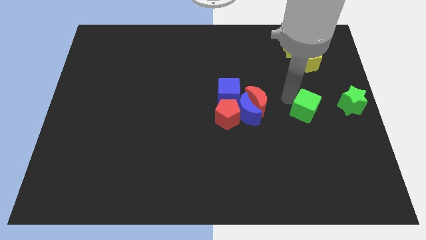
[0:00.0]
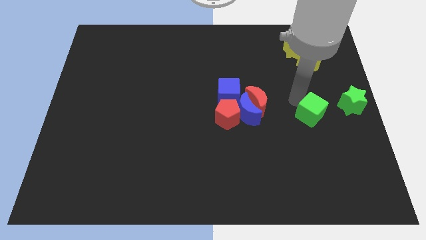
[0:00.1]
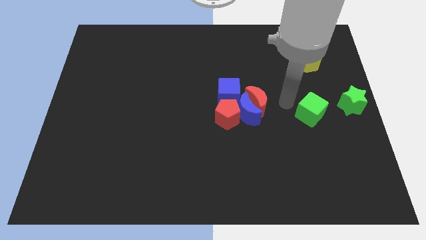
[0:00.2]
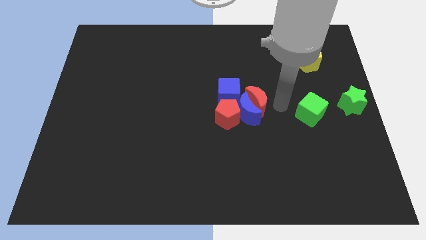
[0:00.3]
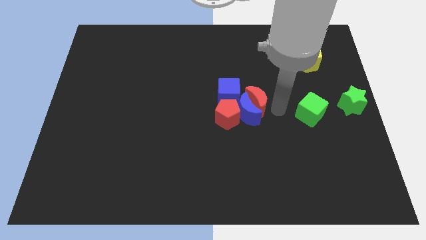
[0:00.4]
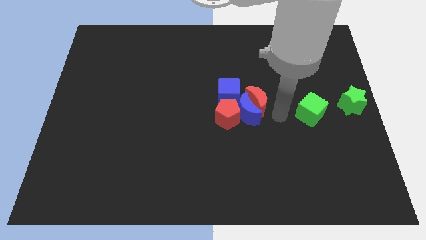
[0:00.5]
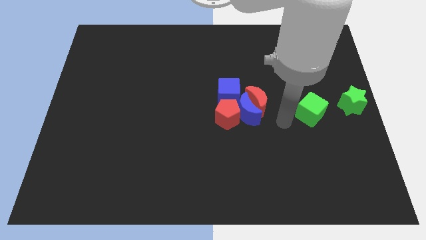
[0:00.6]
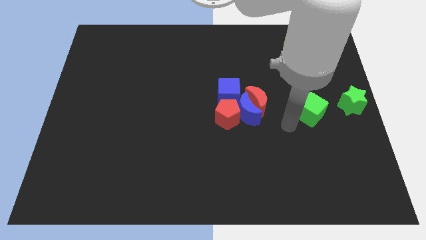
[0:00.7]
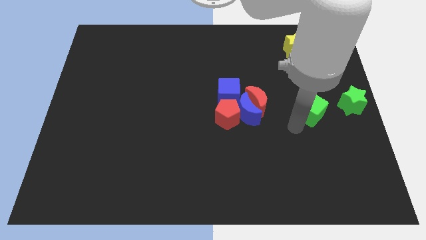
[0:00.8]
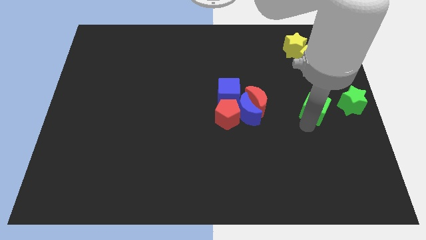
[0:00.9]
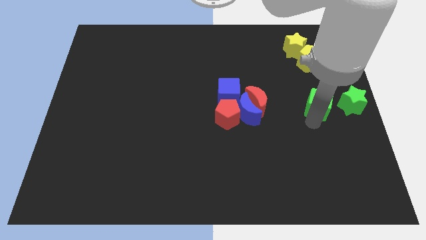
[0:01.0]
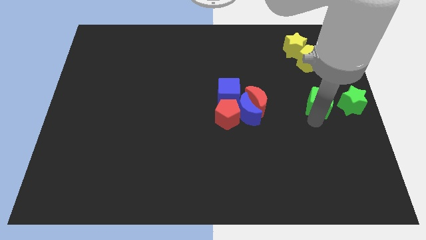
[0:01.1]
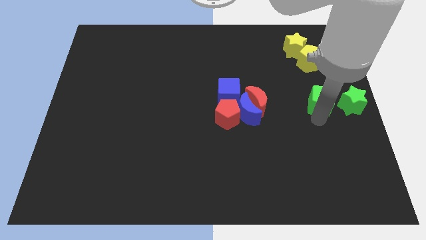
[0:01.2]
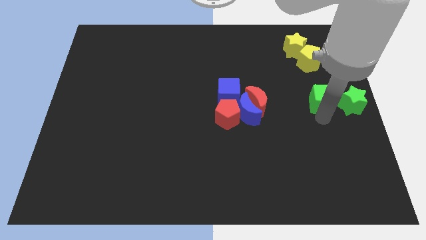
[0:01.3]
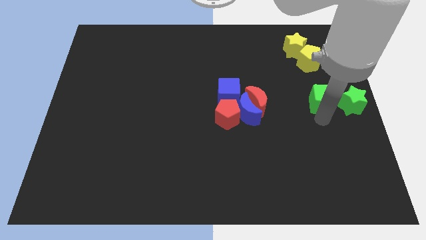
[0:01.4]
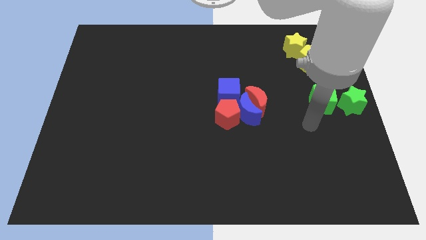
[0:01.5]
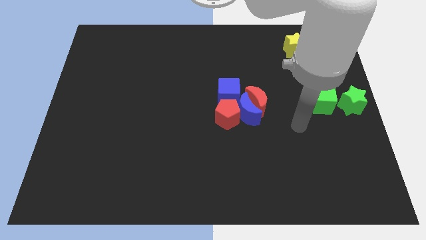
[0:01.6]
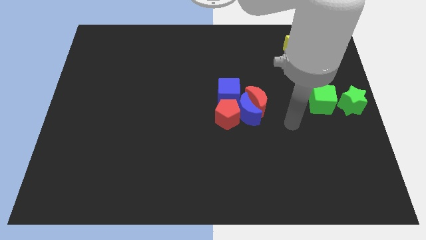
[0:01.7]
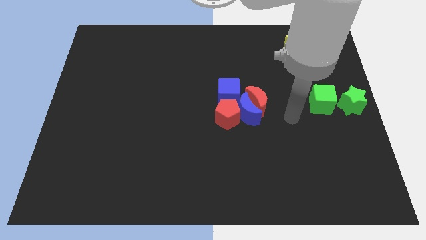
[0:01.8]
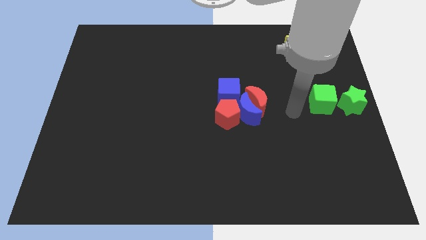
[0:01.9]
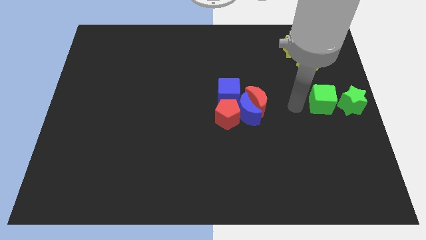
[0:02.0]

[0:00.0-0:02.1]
place the green cube at the left side of the green star

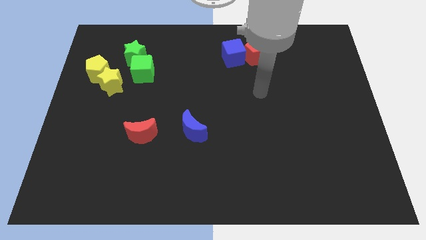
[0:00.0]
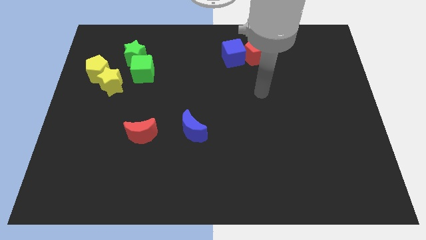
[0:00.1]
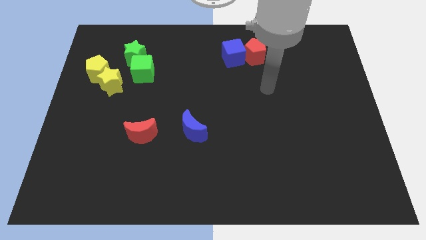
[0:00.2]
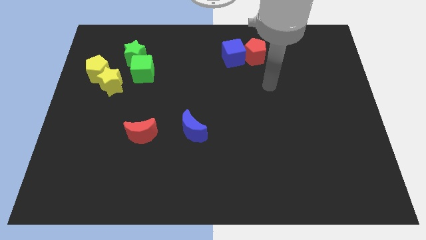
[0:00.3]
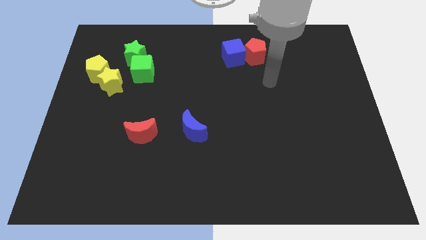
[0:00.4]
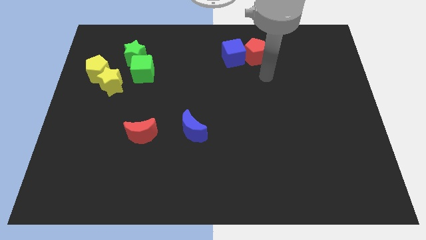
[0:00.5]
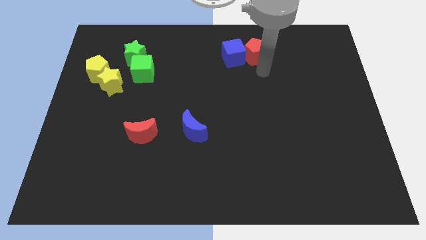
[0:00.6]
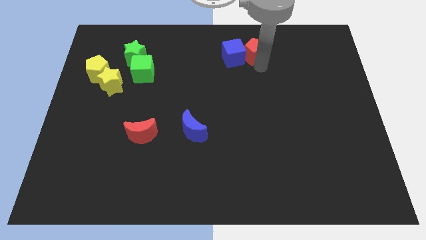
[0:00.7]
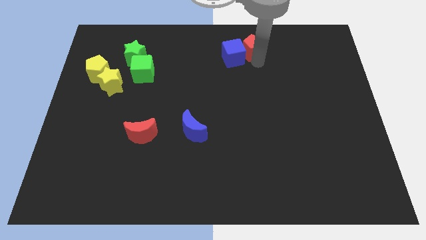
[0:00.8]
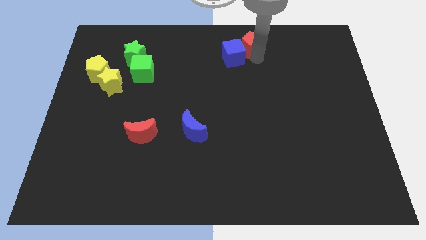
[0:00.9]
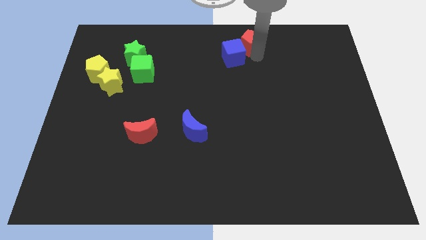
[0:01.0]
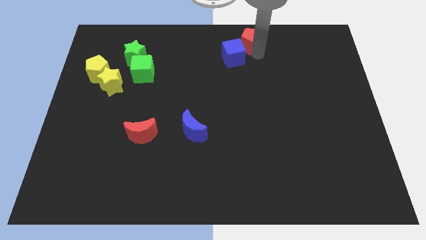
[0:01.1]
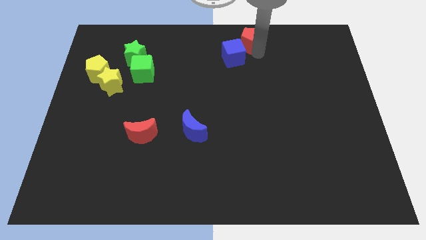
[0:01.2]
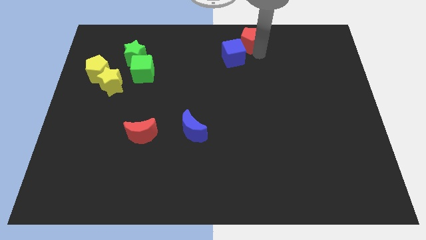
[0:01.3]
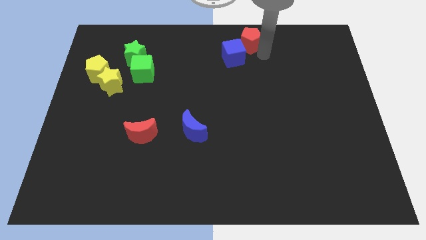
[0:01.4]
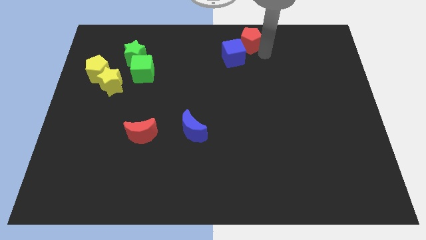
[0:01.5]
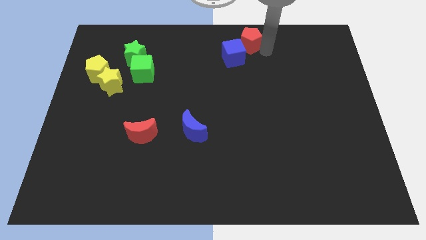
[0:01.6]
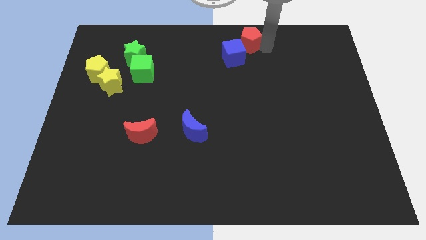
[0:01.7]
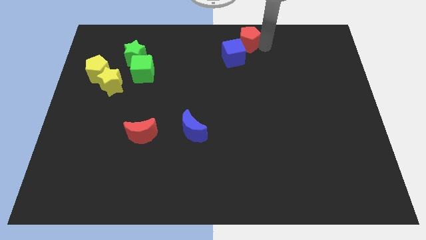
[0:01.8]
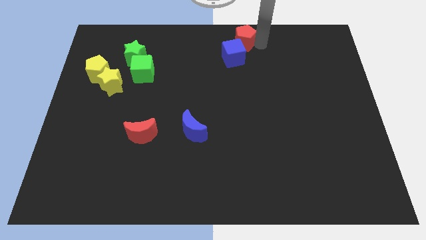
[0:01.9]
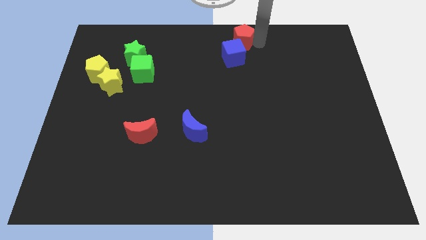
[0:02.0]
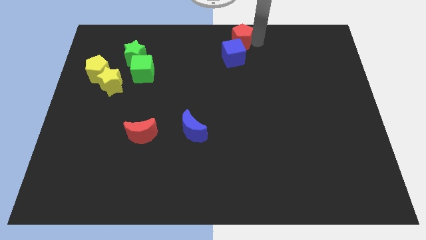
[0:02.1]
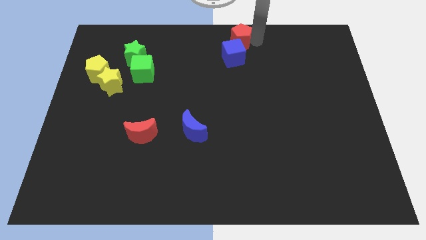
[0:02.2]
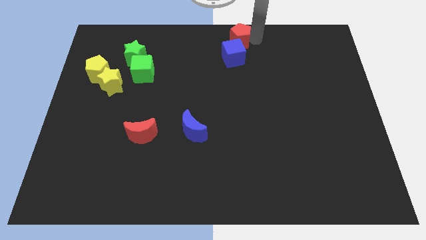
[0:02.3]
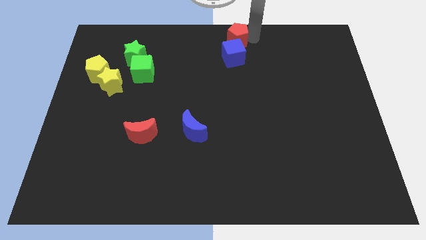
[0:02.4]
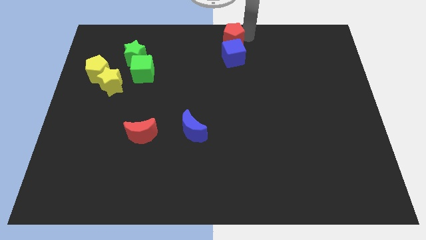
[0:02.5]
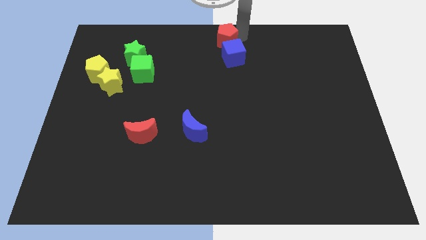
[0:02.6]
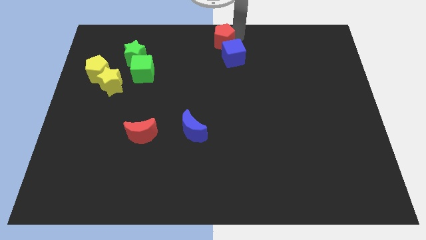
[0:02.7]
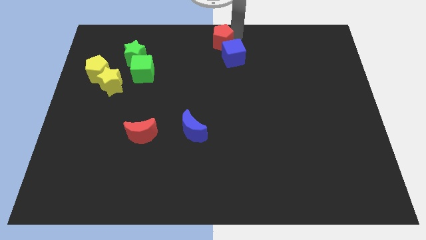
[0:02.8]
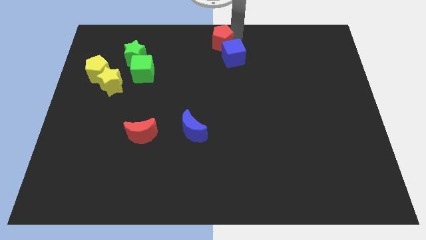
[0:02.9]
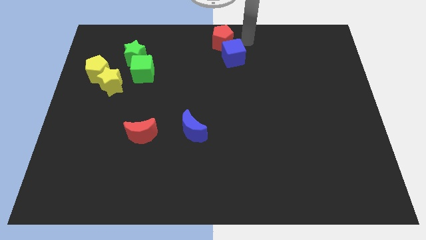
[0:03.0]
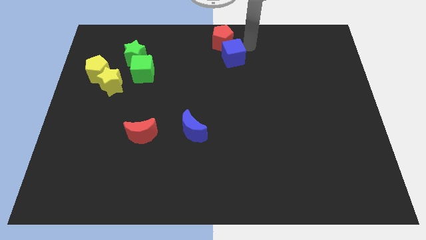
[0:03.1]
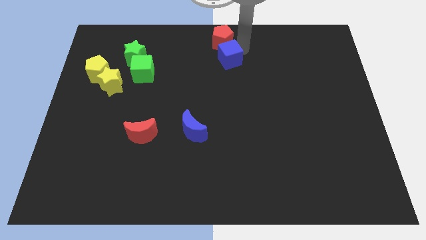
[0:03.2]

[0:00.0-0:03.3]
place red pentagon to the top of blue cube

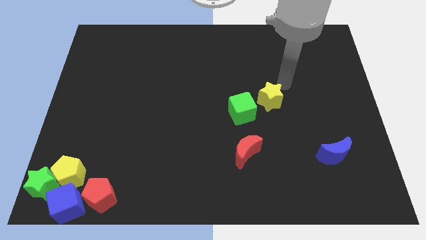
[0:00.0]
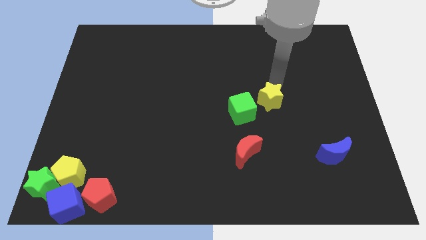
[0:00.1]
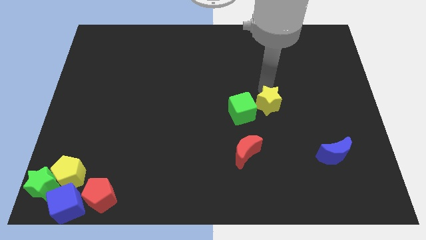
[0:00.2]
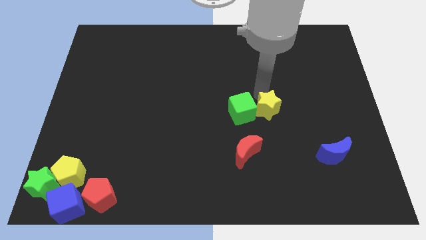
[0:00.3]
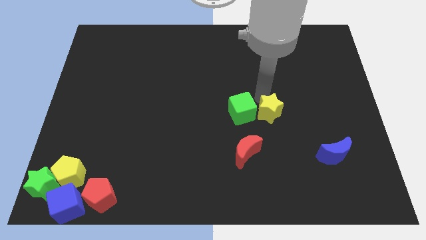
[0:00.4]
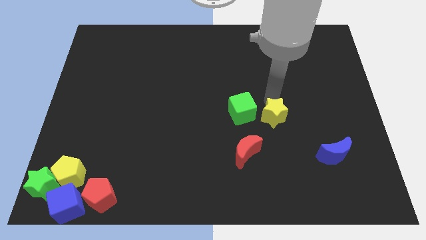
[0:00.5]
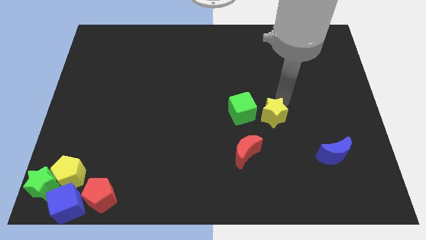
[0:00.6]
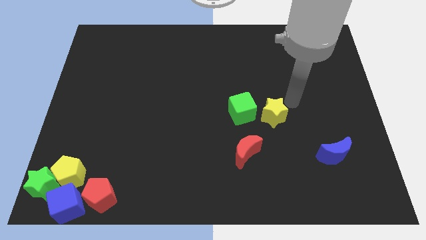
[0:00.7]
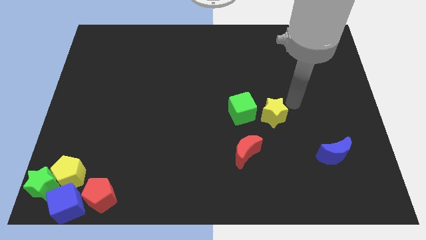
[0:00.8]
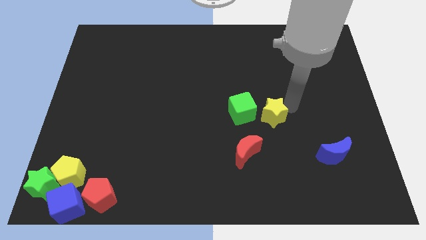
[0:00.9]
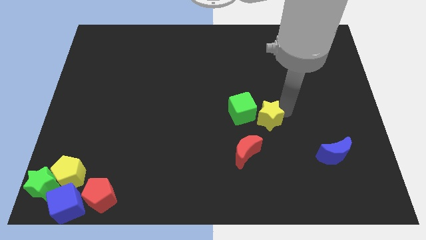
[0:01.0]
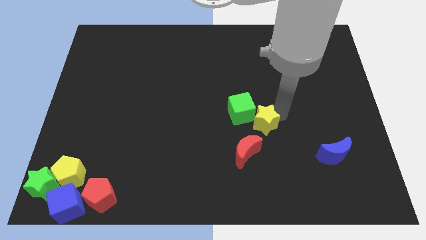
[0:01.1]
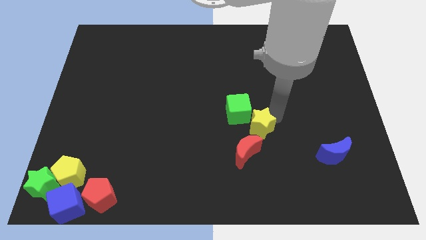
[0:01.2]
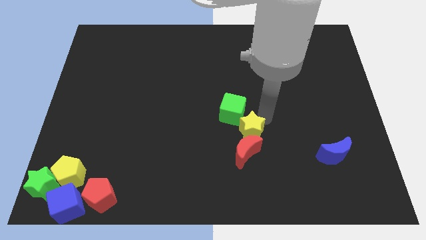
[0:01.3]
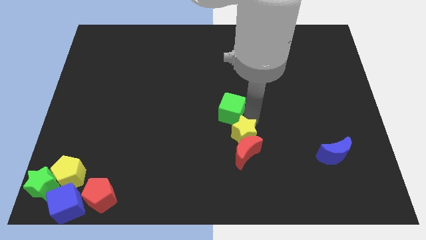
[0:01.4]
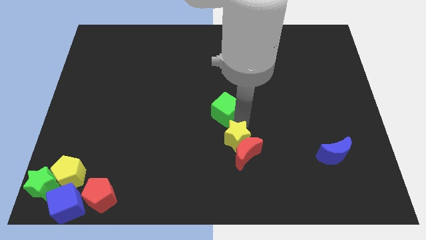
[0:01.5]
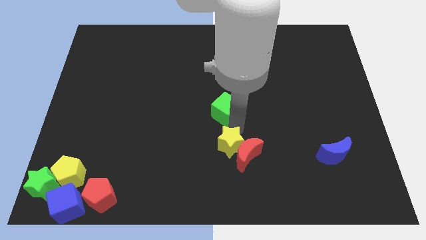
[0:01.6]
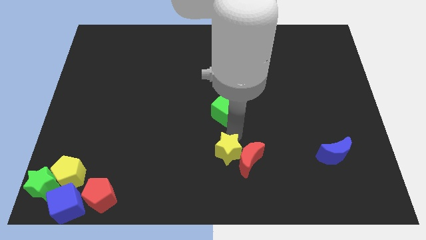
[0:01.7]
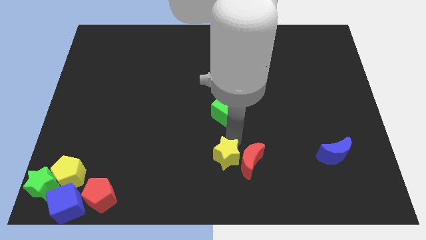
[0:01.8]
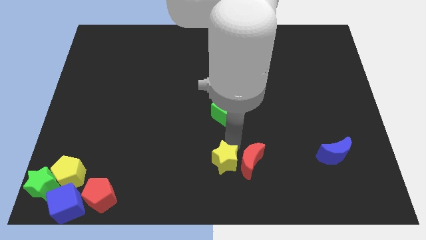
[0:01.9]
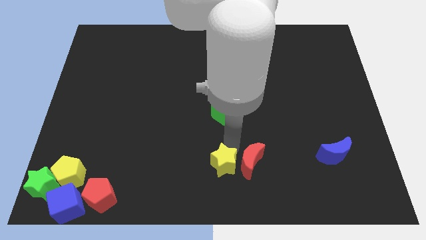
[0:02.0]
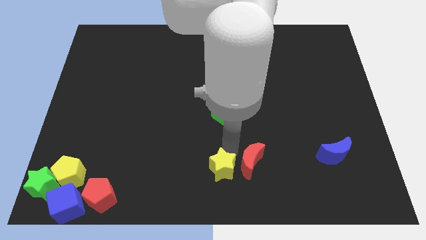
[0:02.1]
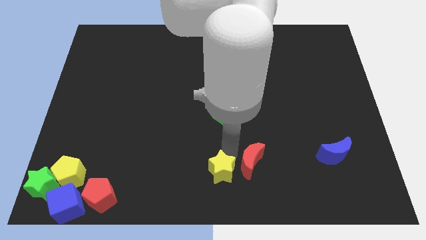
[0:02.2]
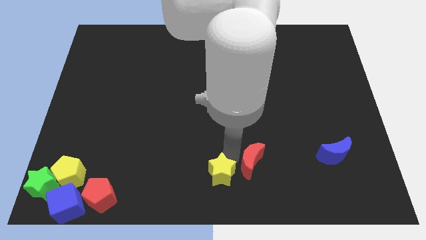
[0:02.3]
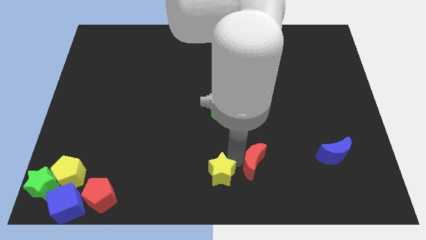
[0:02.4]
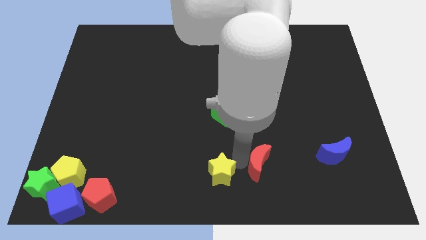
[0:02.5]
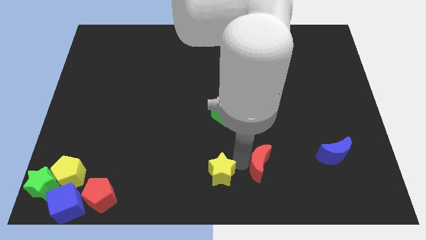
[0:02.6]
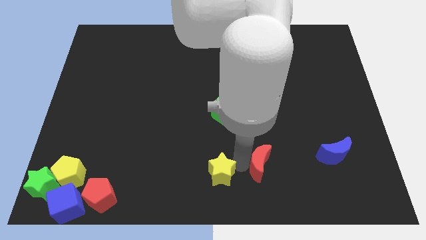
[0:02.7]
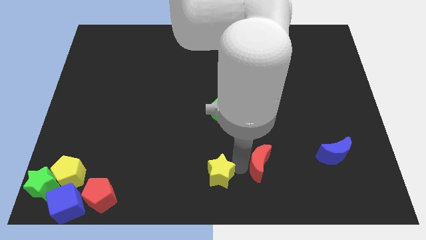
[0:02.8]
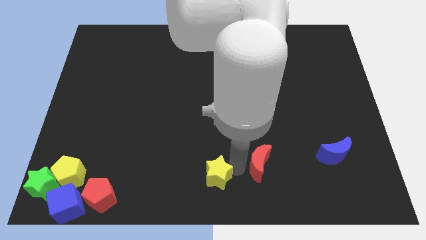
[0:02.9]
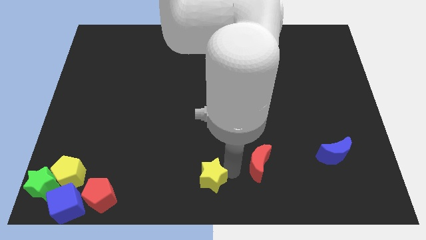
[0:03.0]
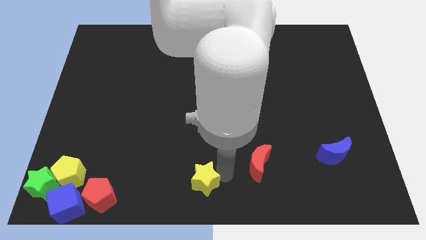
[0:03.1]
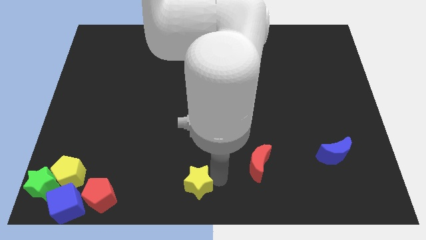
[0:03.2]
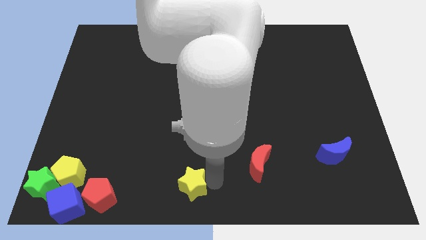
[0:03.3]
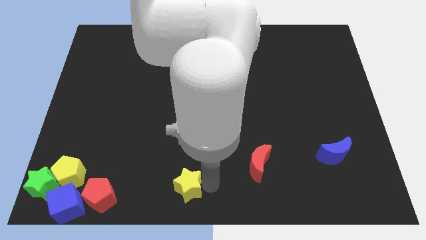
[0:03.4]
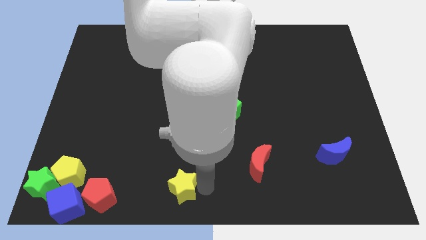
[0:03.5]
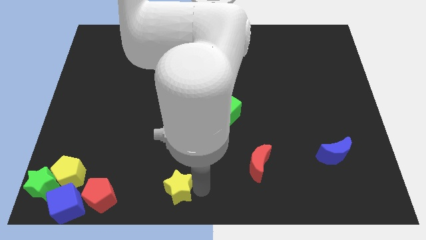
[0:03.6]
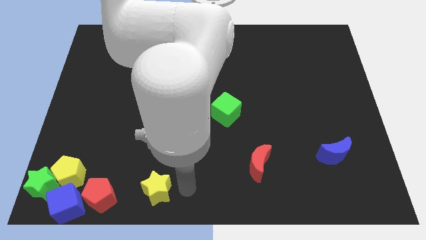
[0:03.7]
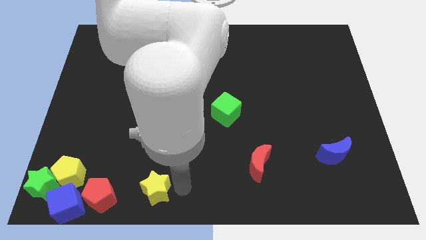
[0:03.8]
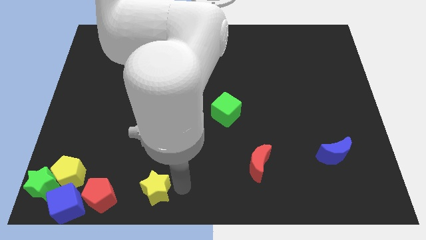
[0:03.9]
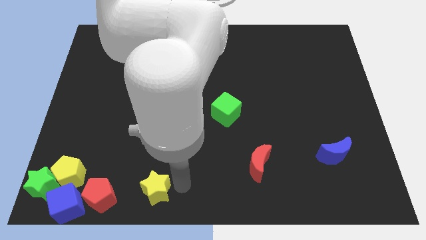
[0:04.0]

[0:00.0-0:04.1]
separate yellow star from green cube
